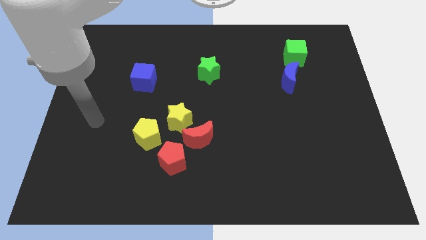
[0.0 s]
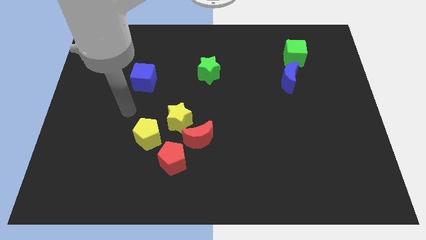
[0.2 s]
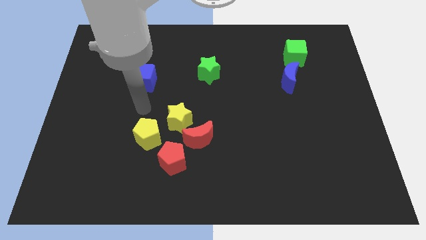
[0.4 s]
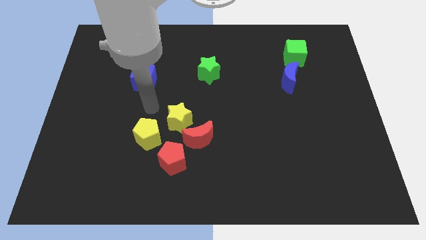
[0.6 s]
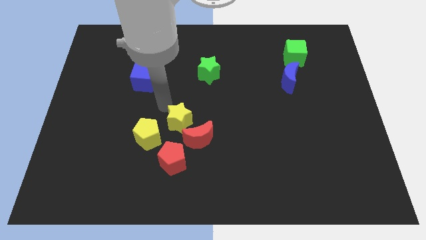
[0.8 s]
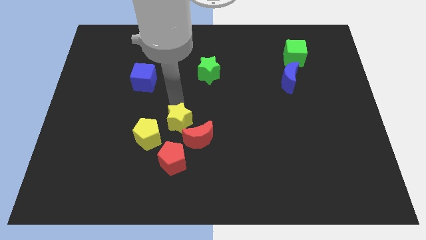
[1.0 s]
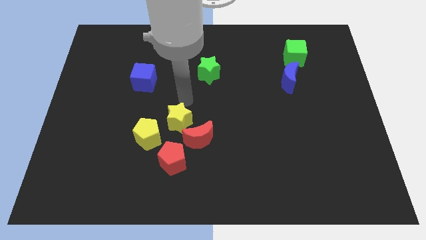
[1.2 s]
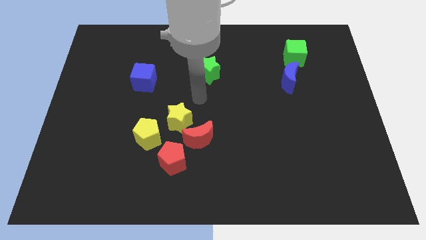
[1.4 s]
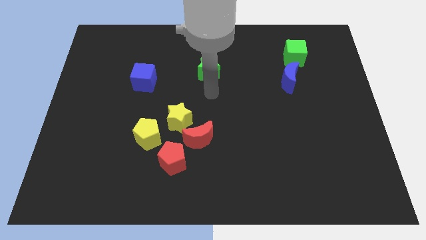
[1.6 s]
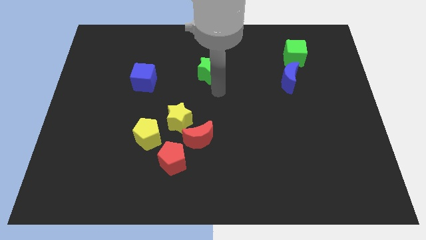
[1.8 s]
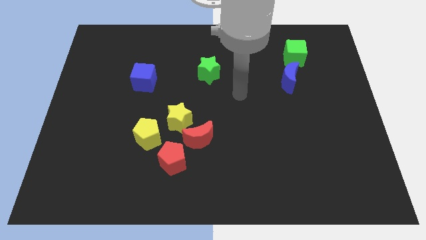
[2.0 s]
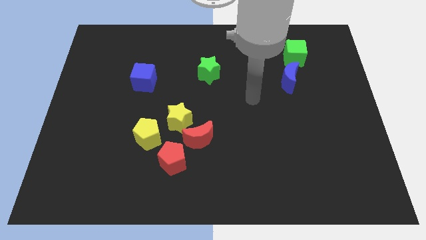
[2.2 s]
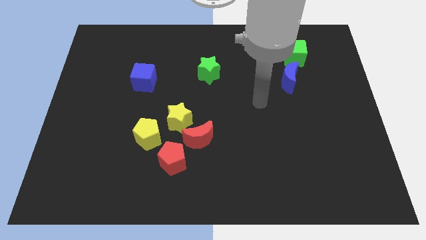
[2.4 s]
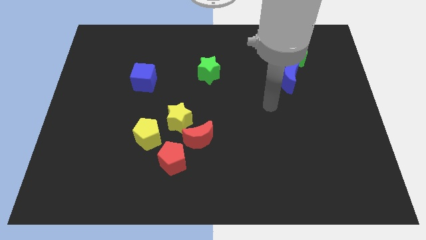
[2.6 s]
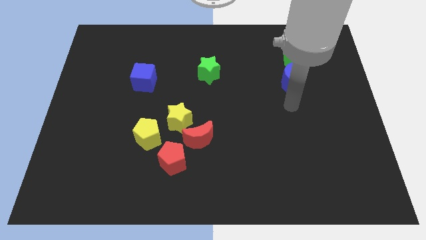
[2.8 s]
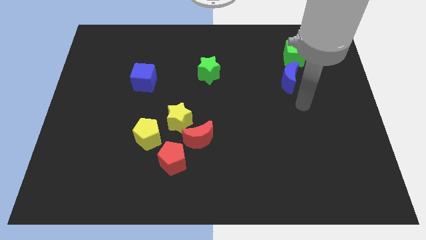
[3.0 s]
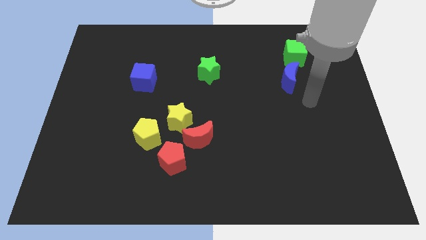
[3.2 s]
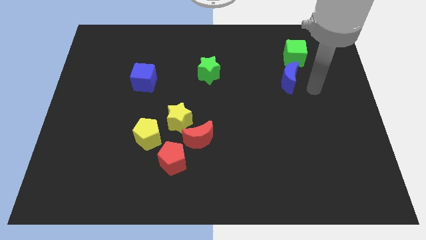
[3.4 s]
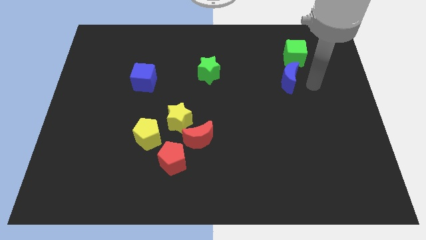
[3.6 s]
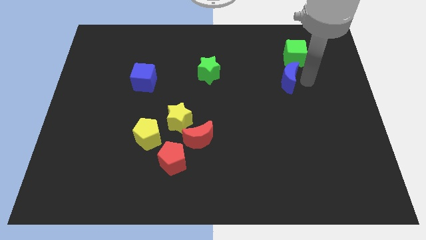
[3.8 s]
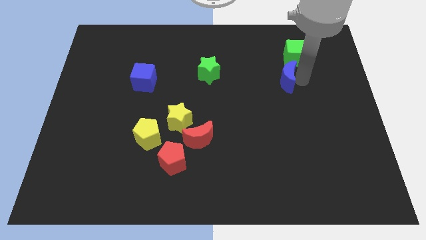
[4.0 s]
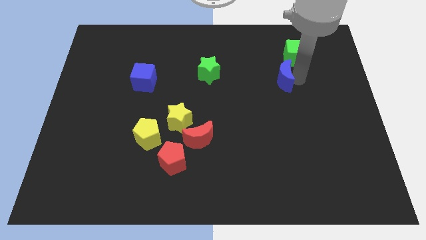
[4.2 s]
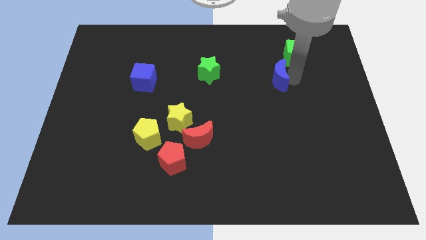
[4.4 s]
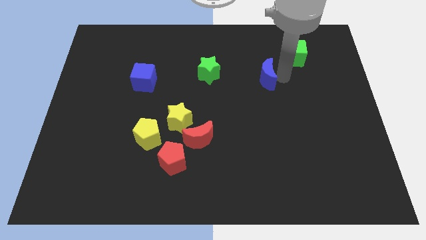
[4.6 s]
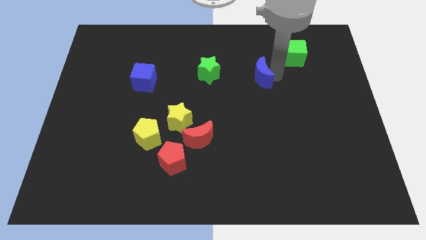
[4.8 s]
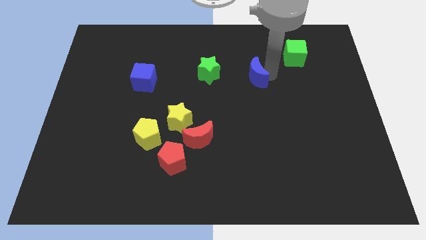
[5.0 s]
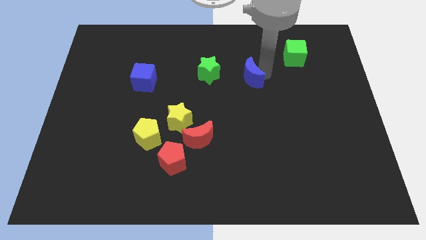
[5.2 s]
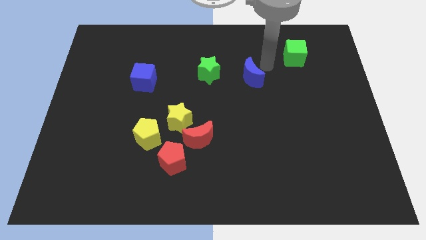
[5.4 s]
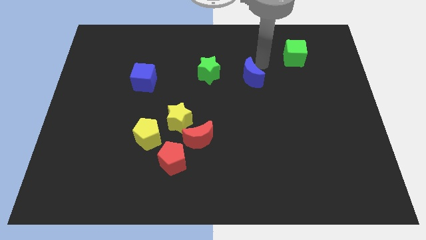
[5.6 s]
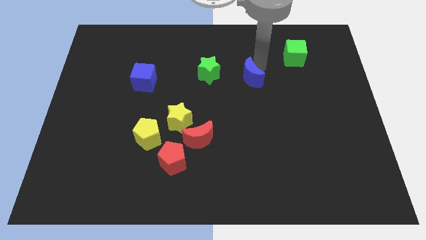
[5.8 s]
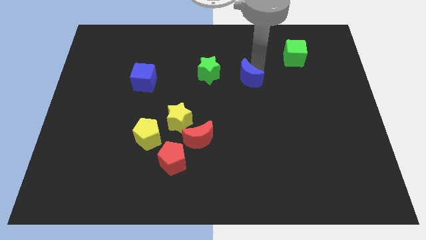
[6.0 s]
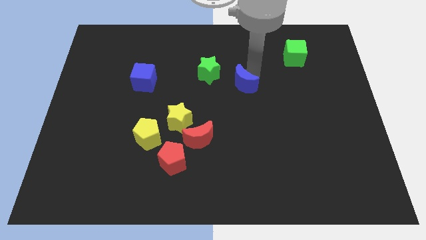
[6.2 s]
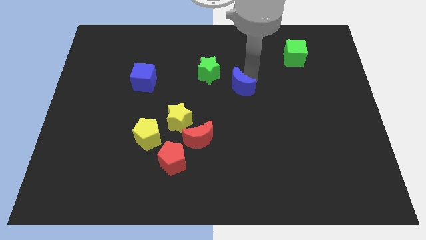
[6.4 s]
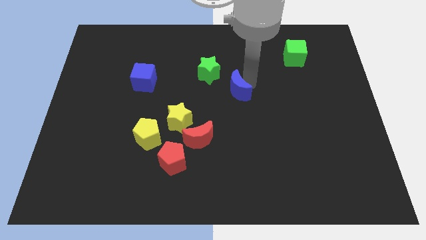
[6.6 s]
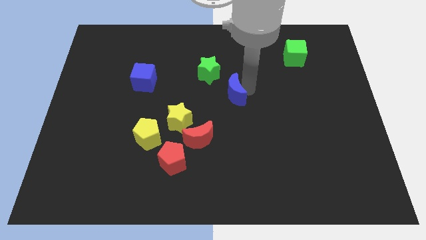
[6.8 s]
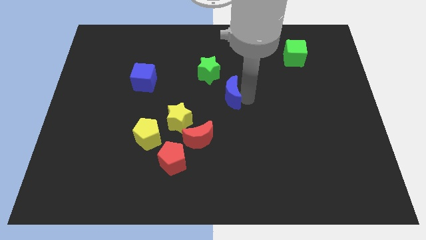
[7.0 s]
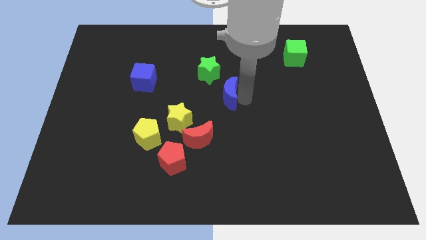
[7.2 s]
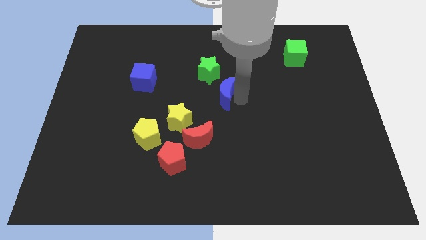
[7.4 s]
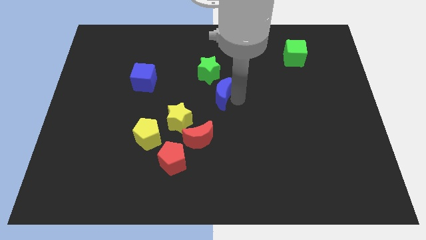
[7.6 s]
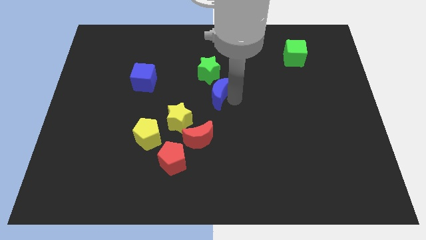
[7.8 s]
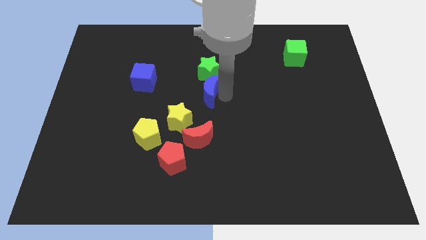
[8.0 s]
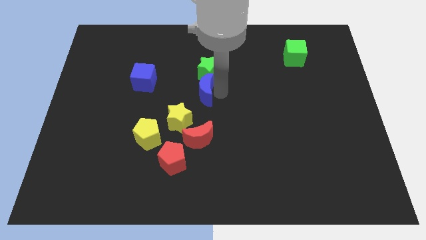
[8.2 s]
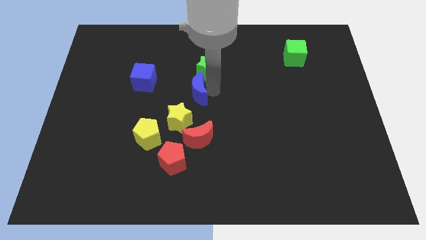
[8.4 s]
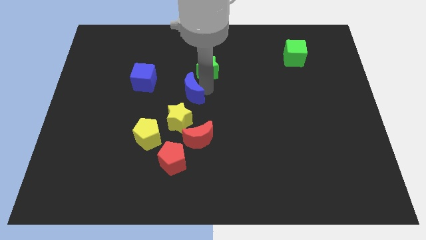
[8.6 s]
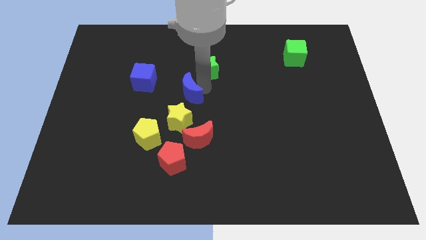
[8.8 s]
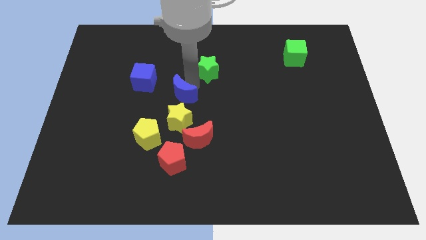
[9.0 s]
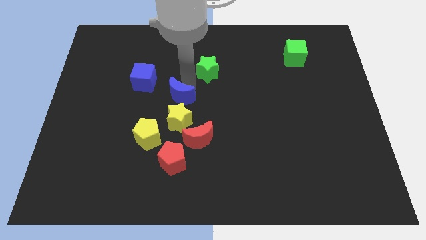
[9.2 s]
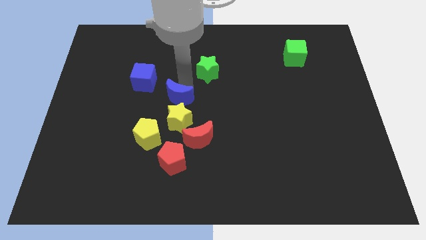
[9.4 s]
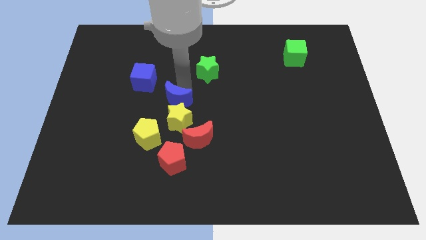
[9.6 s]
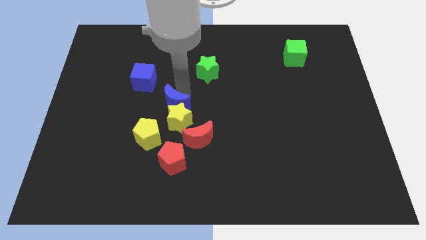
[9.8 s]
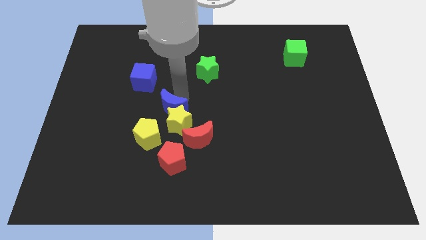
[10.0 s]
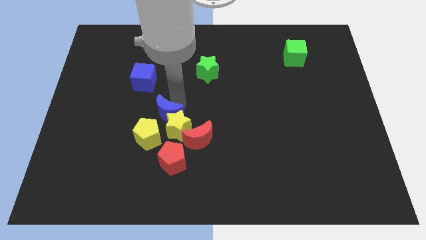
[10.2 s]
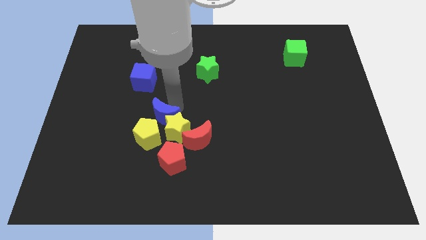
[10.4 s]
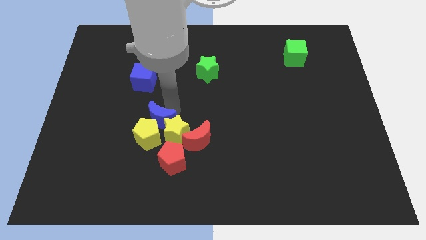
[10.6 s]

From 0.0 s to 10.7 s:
push the blue moon to the yellow pentagon

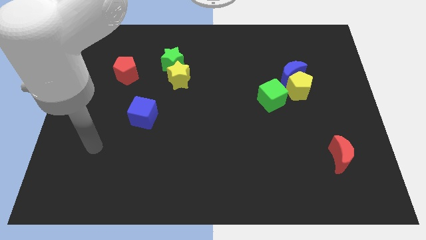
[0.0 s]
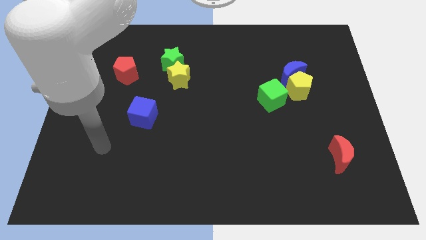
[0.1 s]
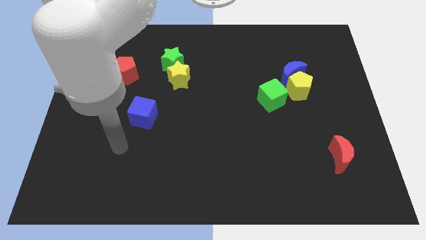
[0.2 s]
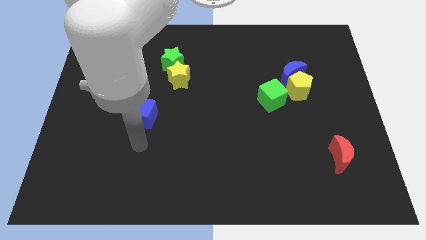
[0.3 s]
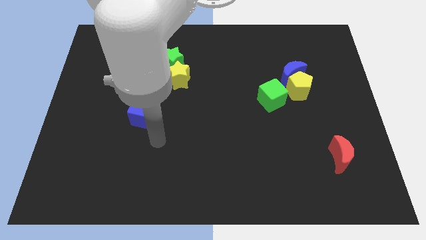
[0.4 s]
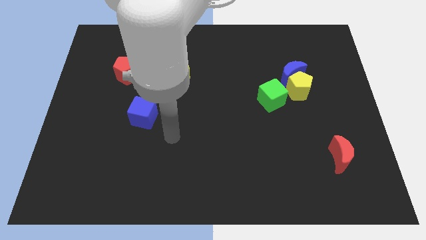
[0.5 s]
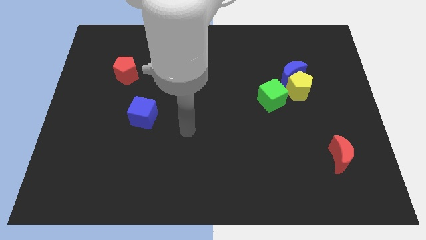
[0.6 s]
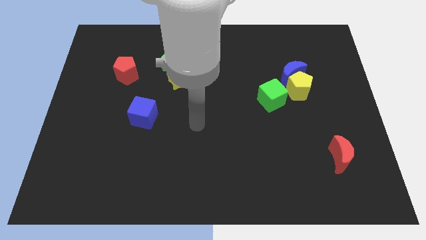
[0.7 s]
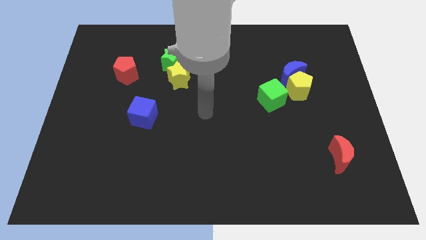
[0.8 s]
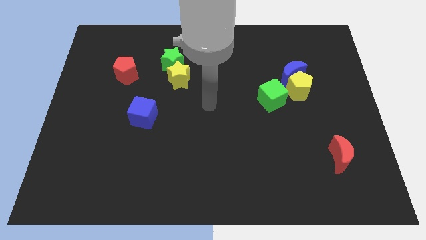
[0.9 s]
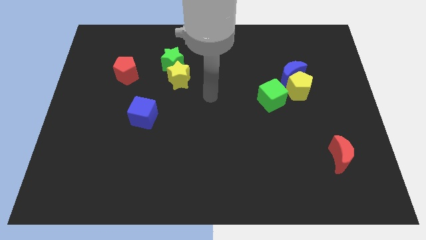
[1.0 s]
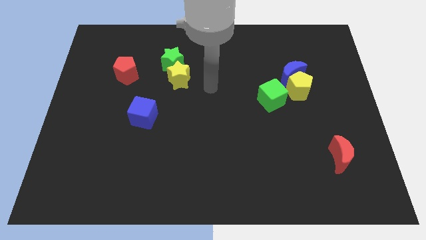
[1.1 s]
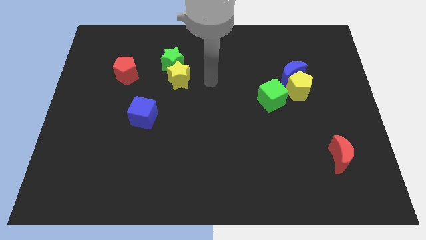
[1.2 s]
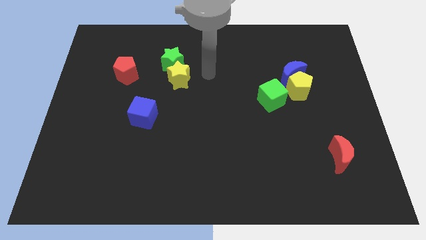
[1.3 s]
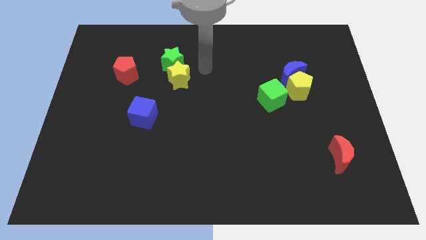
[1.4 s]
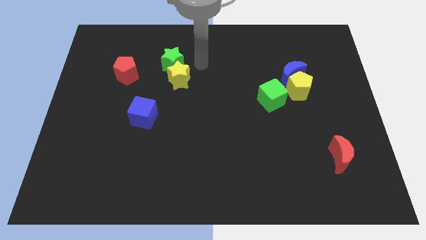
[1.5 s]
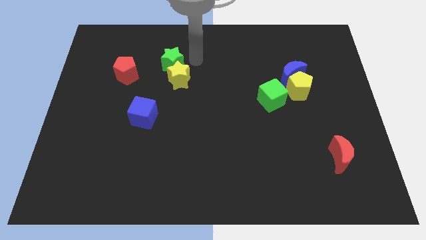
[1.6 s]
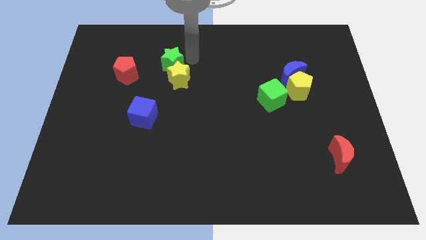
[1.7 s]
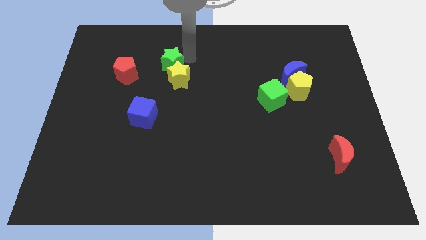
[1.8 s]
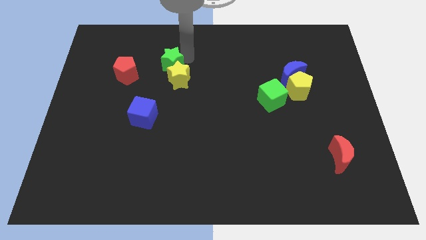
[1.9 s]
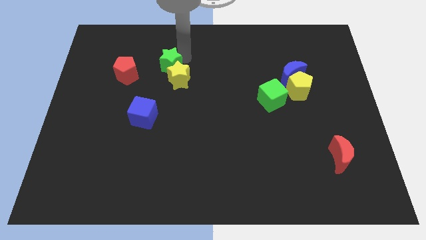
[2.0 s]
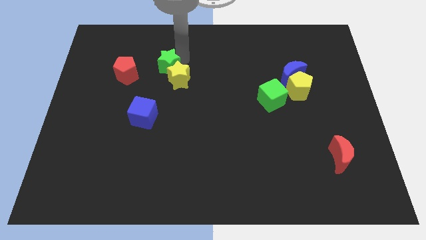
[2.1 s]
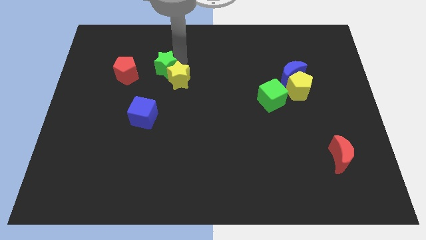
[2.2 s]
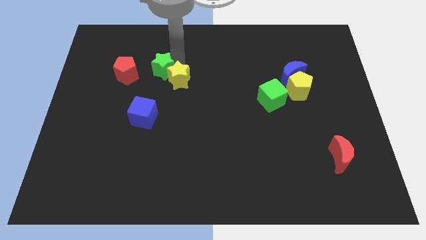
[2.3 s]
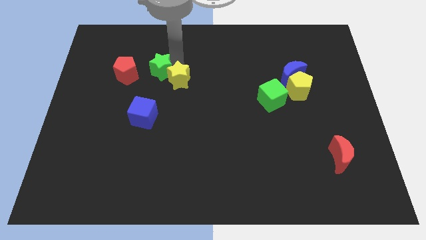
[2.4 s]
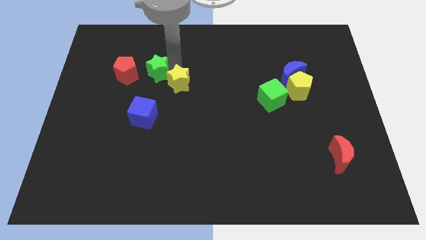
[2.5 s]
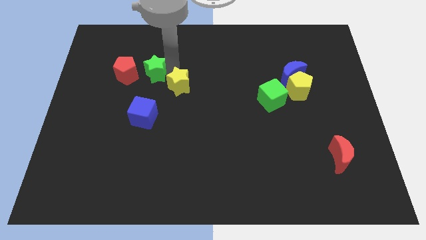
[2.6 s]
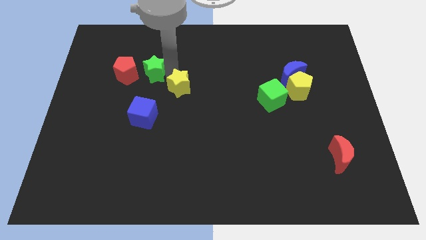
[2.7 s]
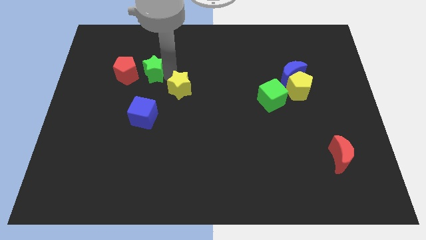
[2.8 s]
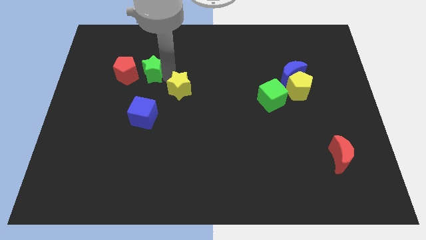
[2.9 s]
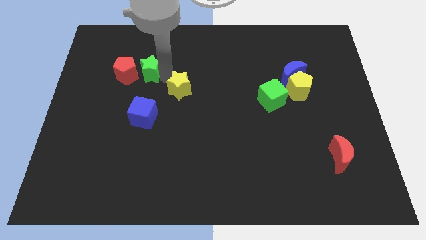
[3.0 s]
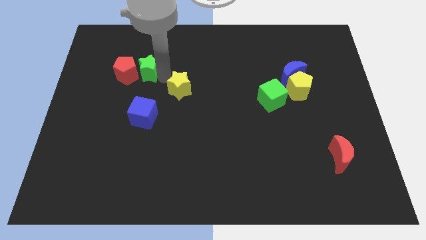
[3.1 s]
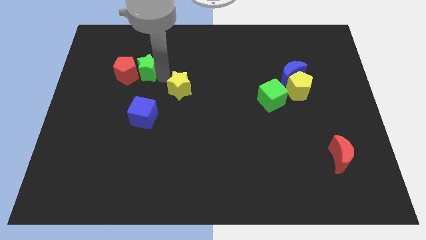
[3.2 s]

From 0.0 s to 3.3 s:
put the green star next to the red pentagon
